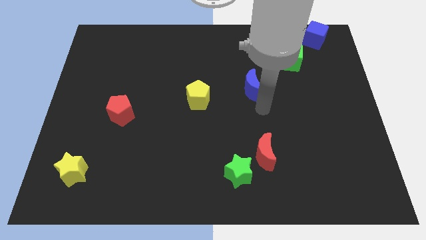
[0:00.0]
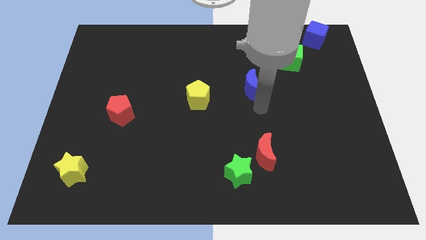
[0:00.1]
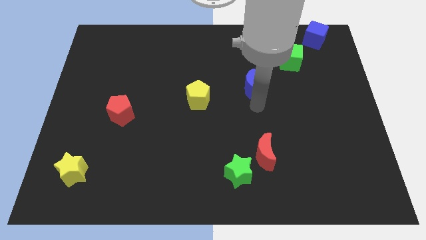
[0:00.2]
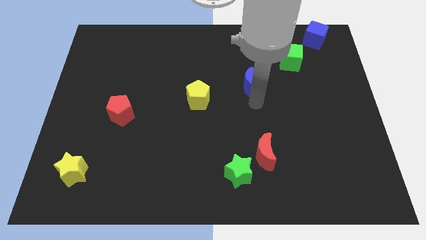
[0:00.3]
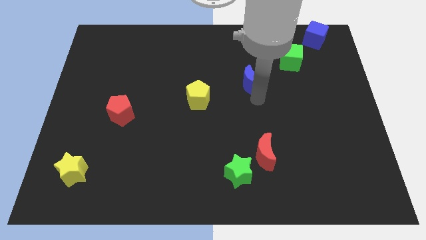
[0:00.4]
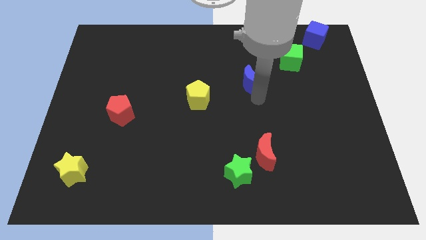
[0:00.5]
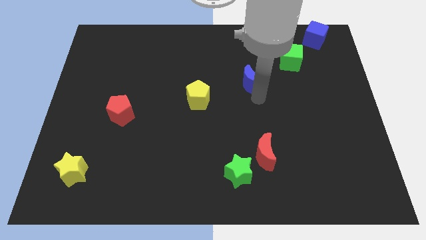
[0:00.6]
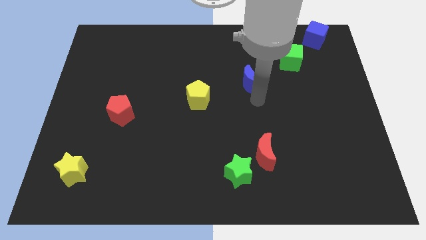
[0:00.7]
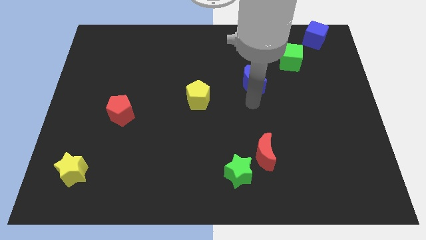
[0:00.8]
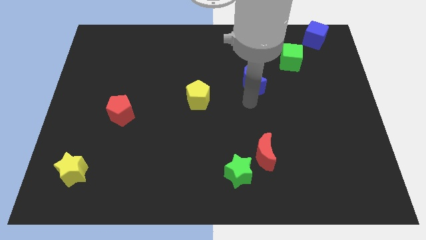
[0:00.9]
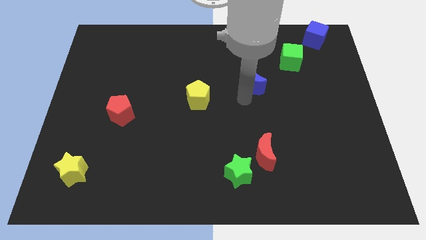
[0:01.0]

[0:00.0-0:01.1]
move blue moon vertically above red moon

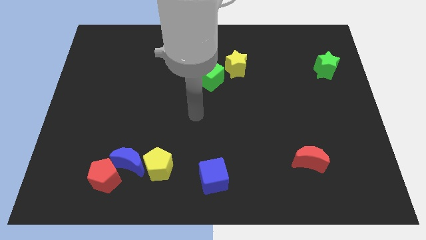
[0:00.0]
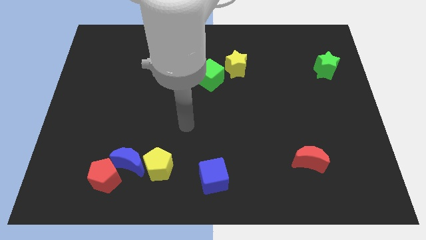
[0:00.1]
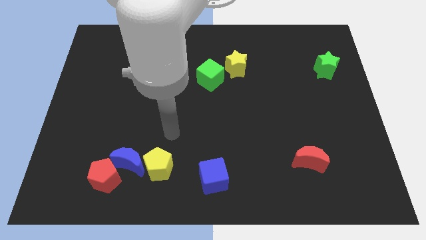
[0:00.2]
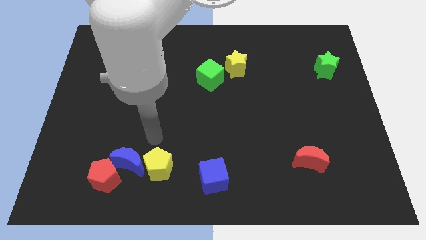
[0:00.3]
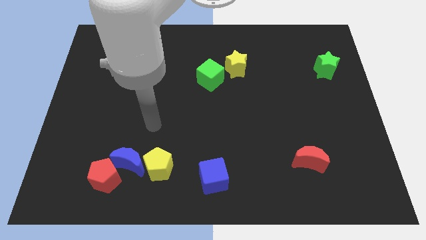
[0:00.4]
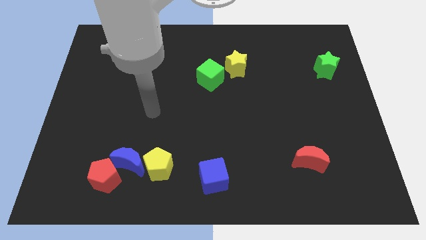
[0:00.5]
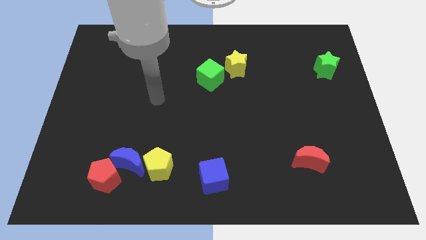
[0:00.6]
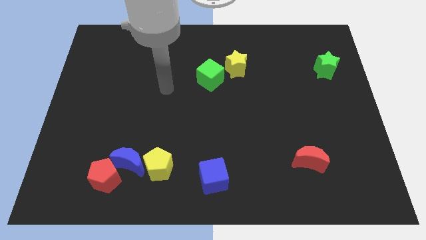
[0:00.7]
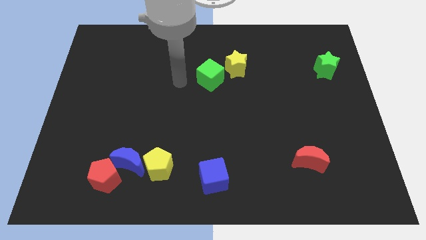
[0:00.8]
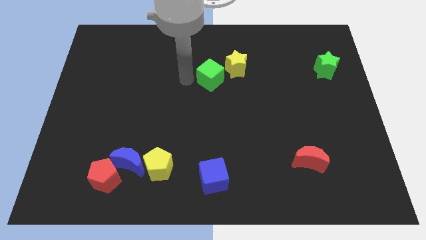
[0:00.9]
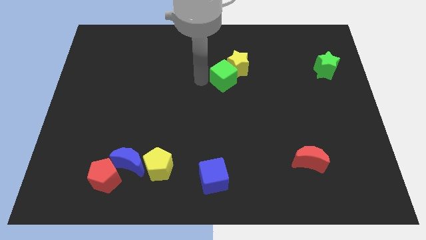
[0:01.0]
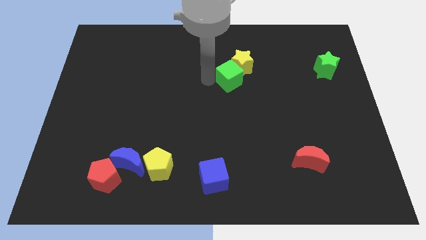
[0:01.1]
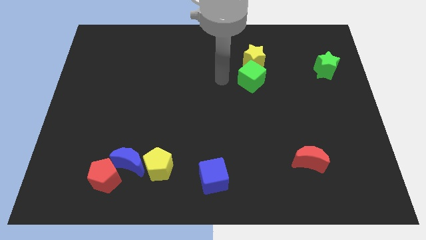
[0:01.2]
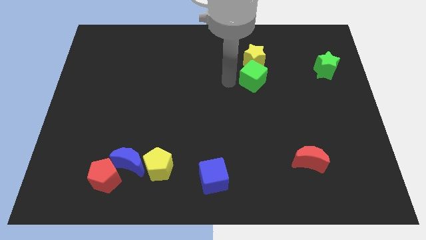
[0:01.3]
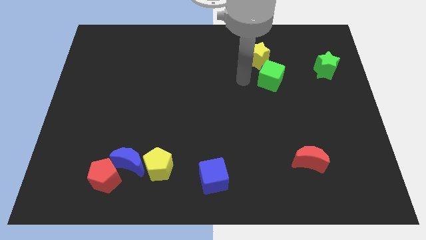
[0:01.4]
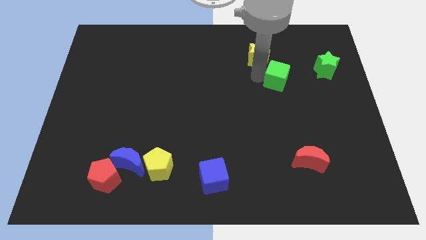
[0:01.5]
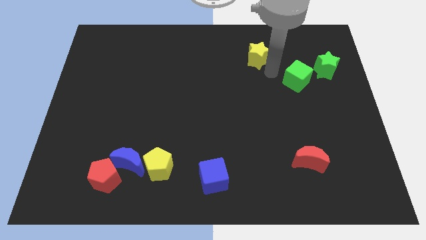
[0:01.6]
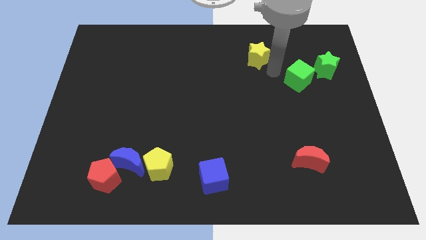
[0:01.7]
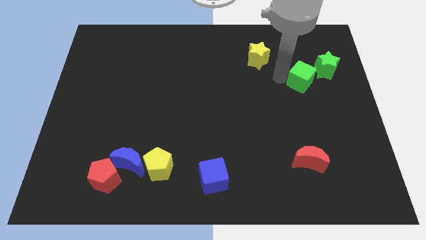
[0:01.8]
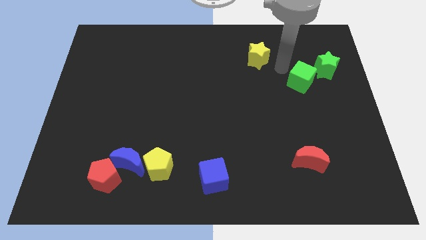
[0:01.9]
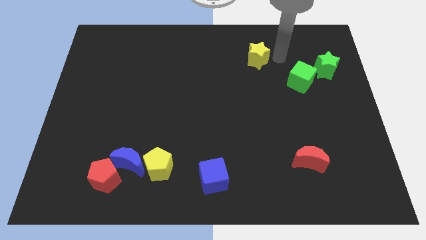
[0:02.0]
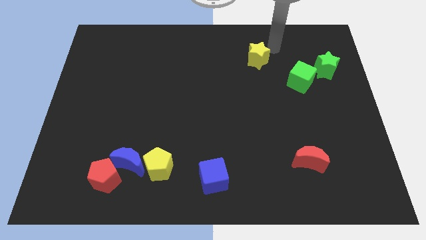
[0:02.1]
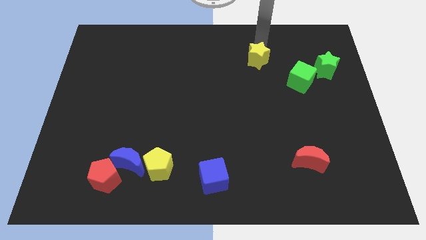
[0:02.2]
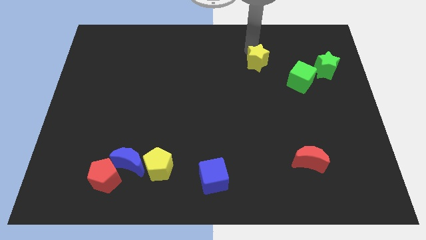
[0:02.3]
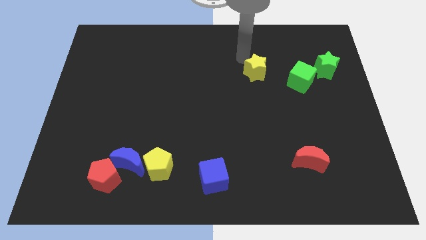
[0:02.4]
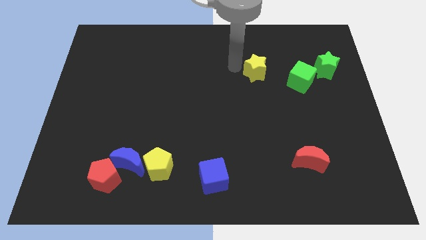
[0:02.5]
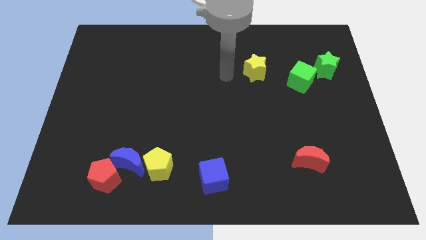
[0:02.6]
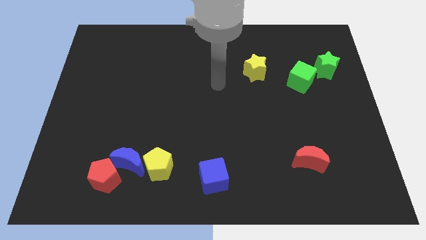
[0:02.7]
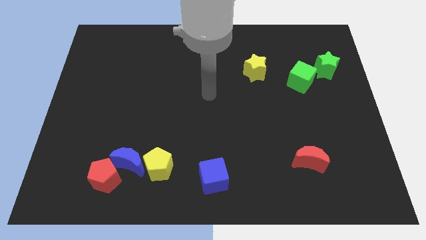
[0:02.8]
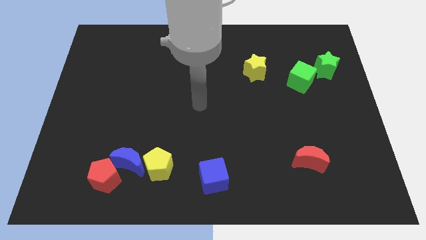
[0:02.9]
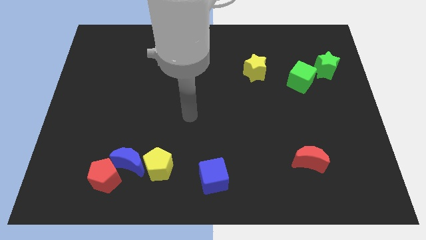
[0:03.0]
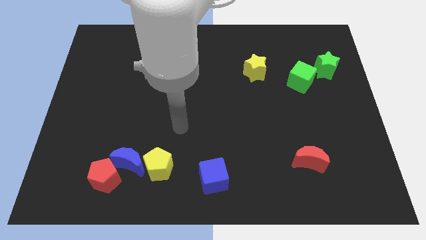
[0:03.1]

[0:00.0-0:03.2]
push green cube near green star and slightly push yellow star downwards

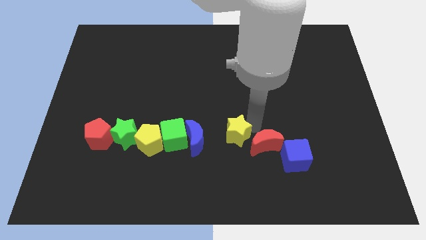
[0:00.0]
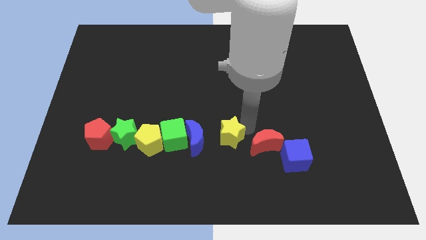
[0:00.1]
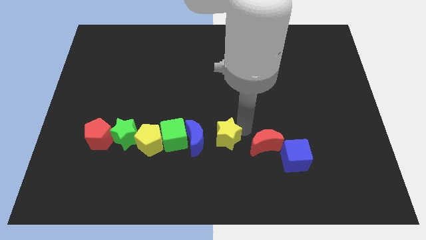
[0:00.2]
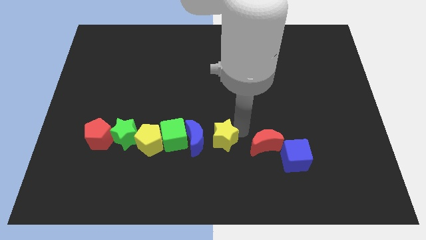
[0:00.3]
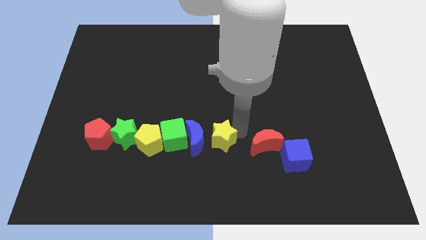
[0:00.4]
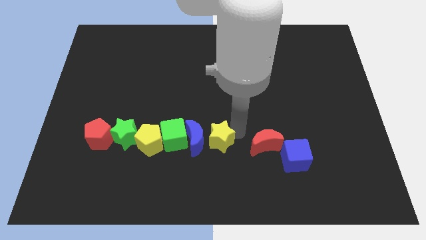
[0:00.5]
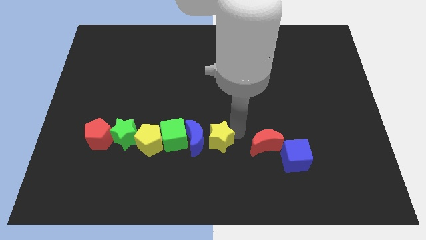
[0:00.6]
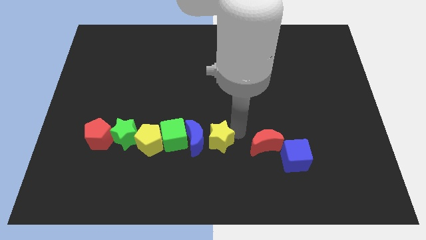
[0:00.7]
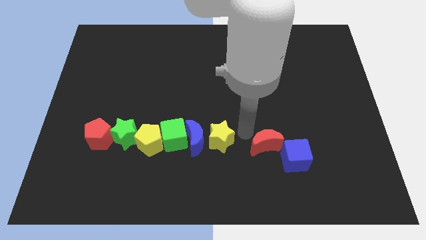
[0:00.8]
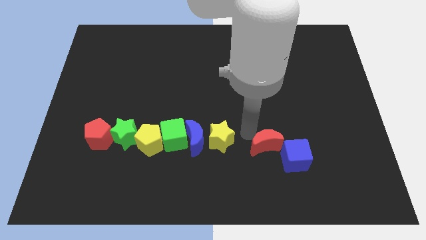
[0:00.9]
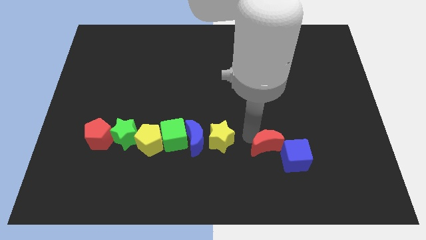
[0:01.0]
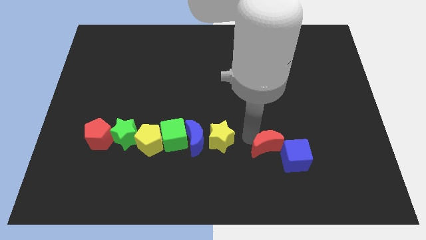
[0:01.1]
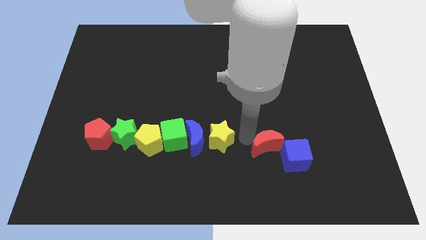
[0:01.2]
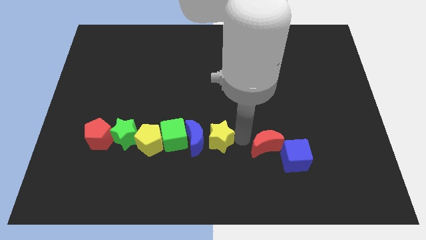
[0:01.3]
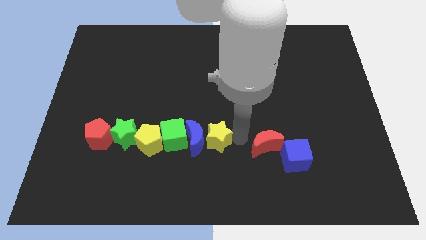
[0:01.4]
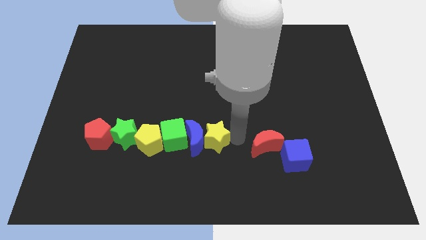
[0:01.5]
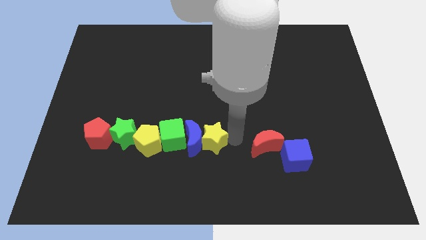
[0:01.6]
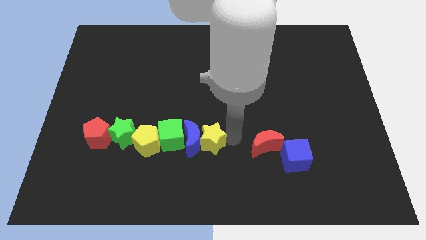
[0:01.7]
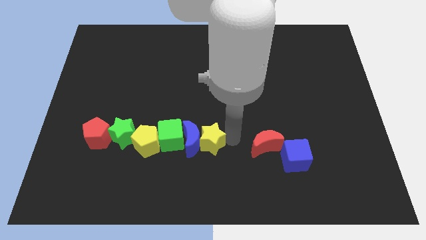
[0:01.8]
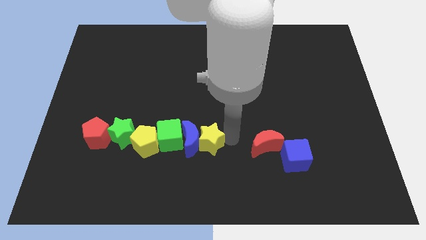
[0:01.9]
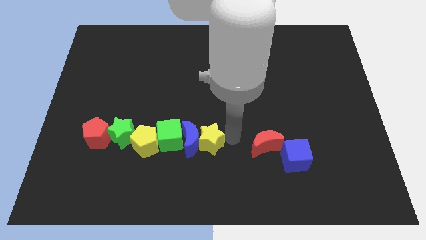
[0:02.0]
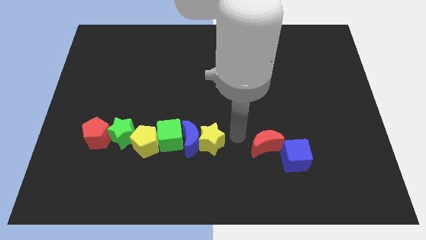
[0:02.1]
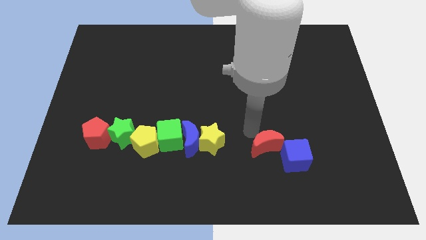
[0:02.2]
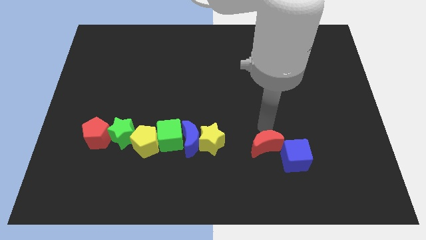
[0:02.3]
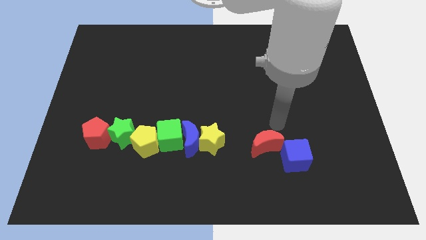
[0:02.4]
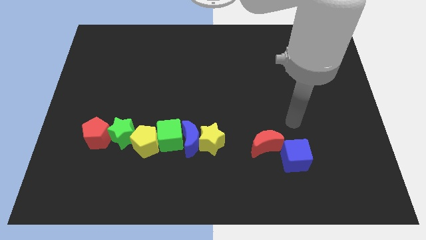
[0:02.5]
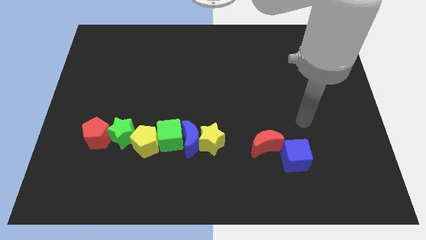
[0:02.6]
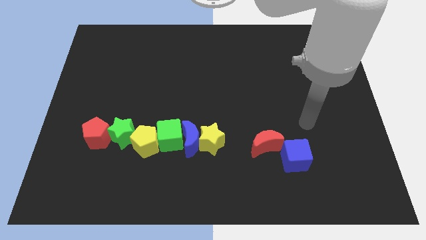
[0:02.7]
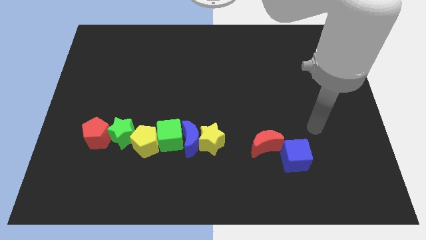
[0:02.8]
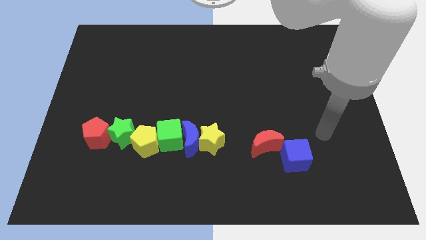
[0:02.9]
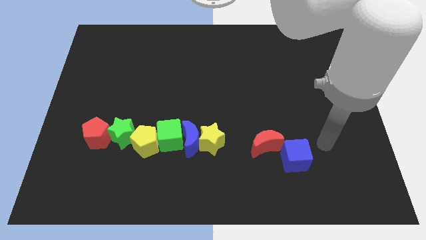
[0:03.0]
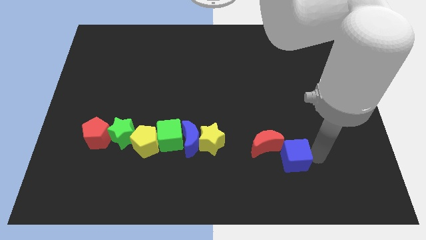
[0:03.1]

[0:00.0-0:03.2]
push the yellow star into the blue moon

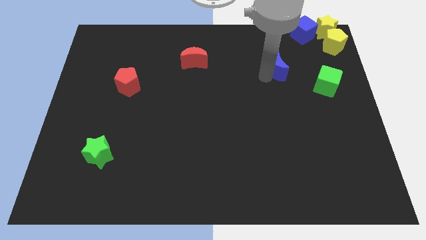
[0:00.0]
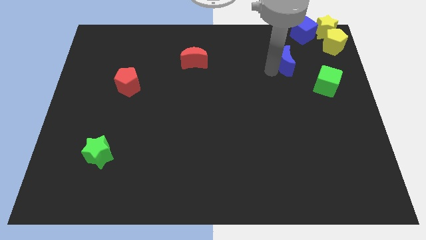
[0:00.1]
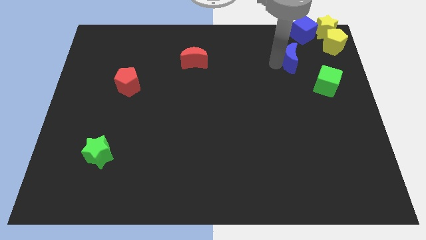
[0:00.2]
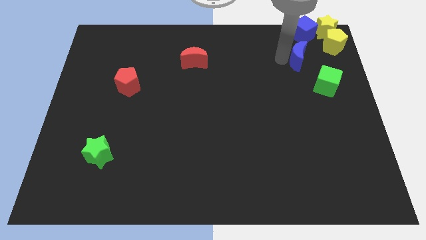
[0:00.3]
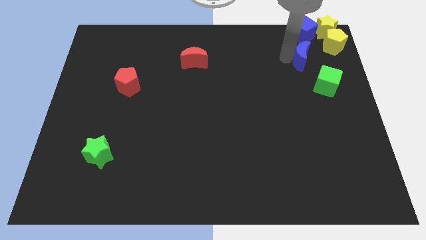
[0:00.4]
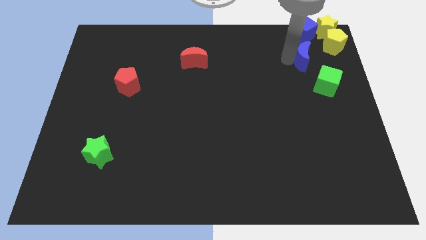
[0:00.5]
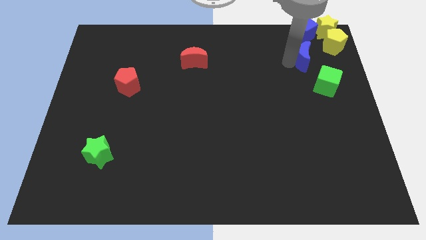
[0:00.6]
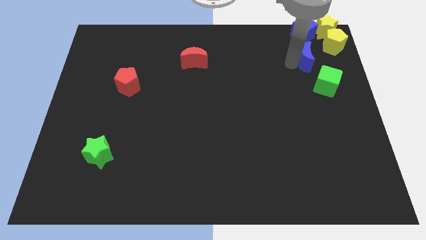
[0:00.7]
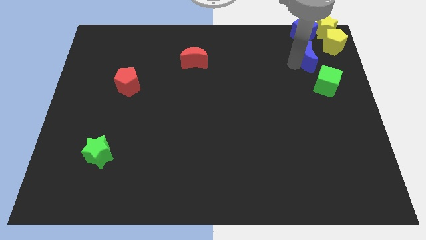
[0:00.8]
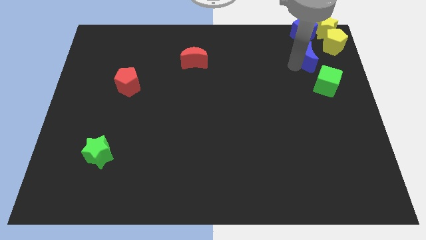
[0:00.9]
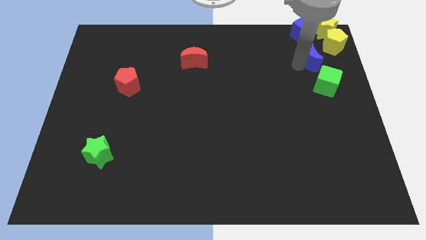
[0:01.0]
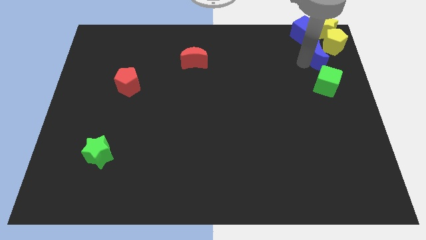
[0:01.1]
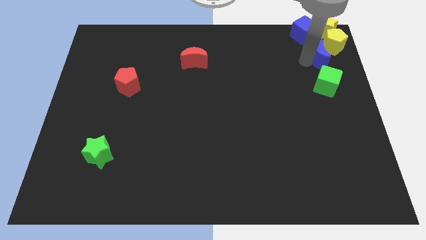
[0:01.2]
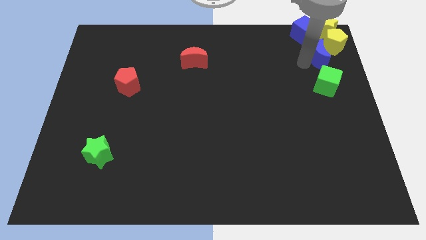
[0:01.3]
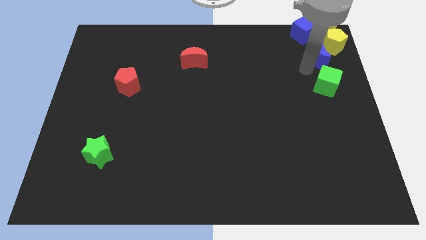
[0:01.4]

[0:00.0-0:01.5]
place the blue crescent in between the green cube and the blue cube

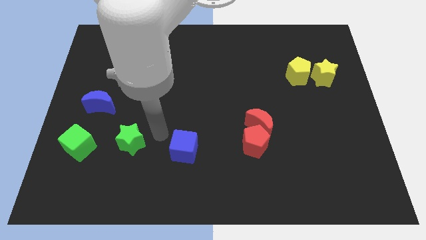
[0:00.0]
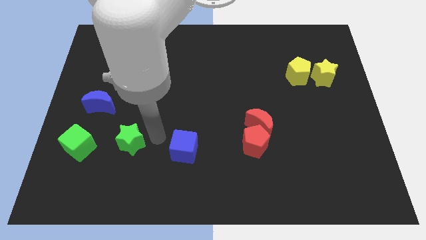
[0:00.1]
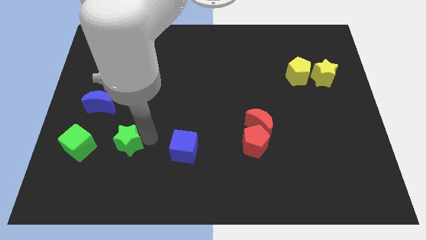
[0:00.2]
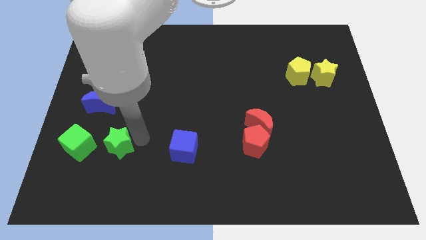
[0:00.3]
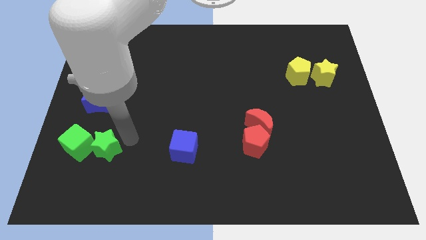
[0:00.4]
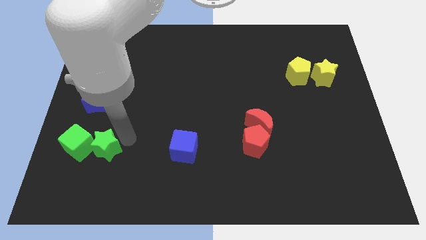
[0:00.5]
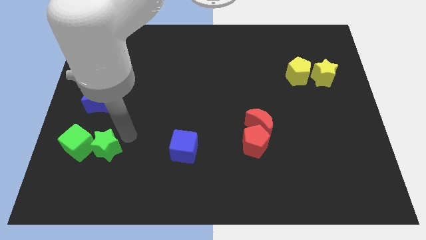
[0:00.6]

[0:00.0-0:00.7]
move the green star into the green cube
